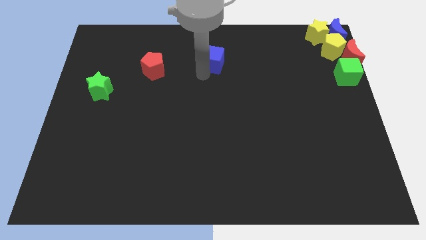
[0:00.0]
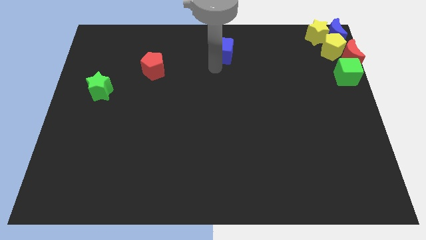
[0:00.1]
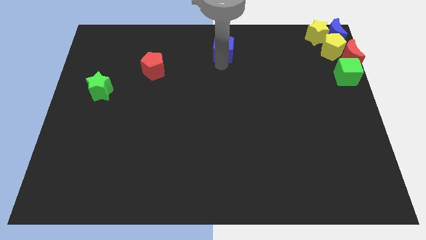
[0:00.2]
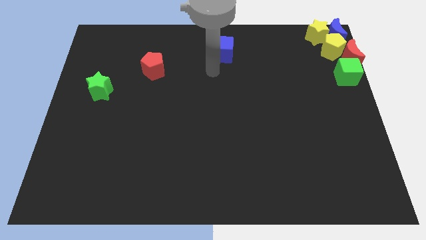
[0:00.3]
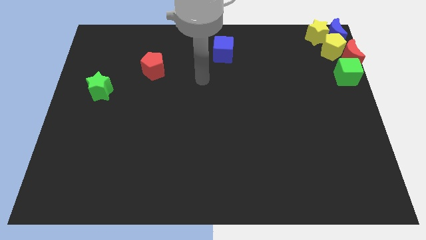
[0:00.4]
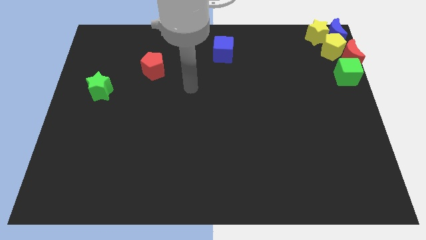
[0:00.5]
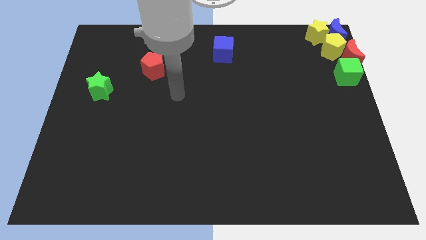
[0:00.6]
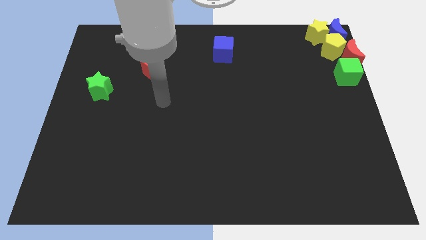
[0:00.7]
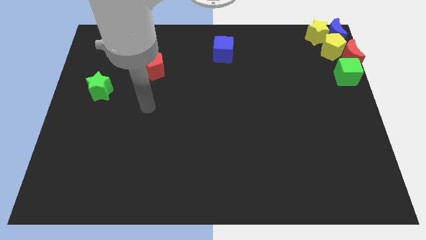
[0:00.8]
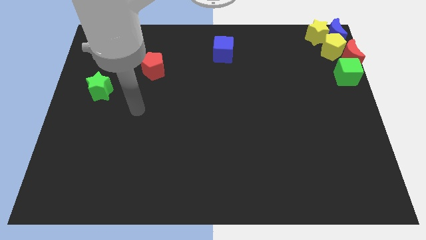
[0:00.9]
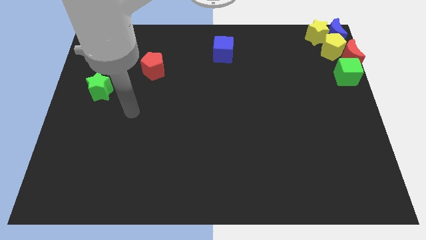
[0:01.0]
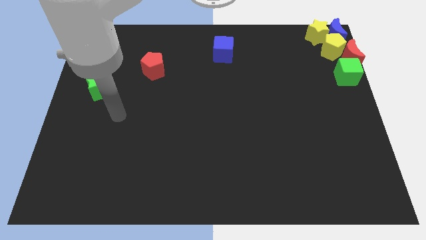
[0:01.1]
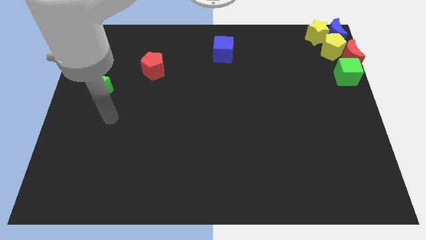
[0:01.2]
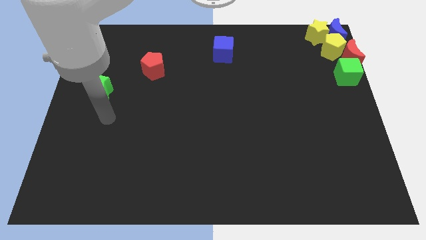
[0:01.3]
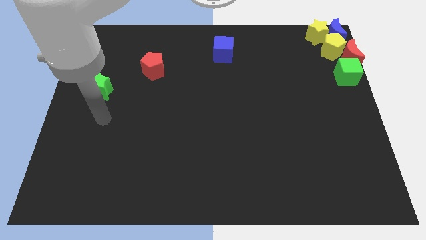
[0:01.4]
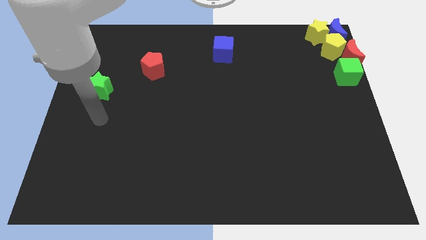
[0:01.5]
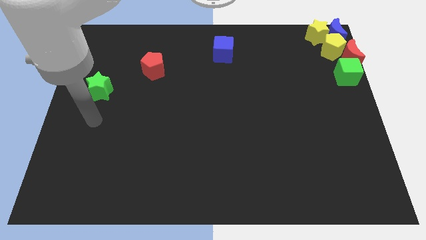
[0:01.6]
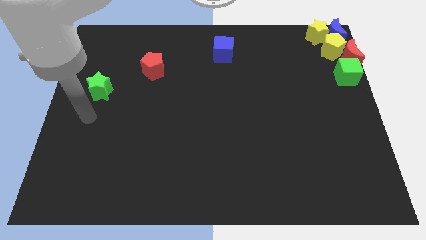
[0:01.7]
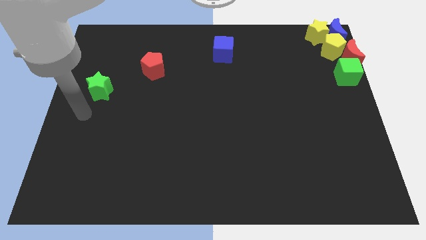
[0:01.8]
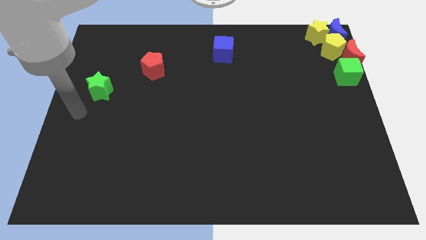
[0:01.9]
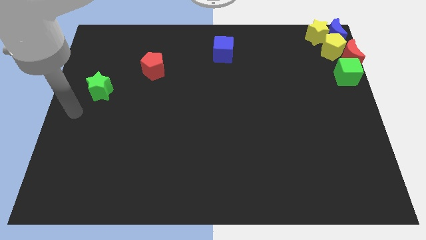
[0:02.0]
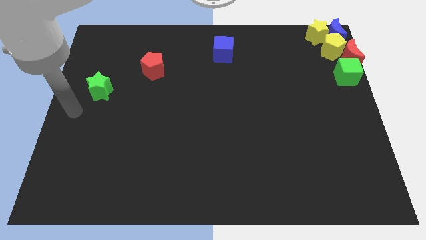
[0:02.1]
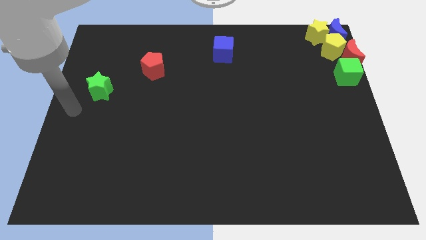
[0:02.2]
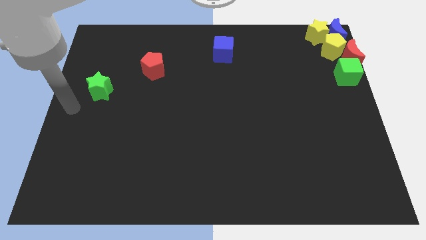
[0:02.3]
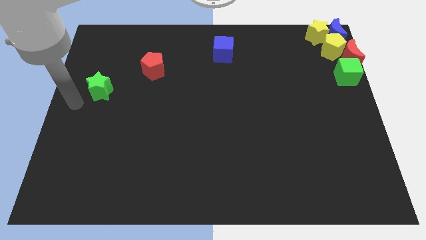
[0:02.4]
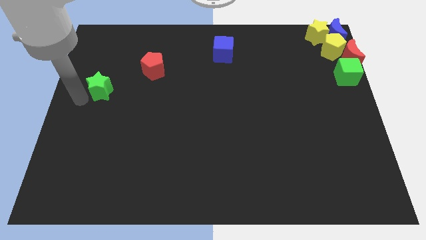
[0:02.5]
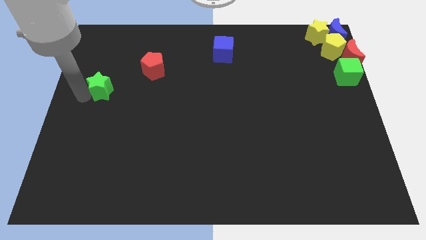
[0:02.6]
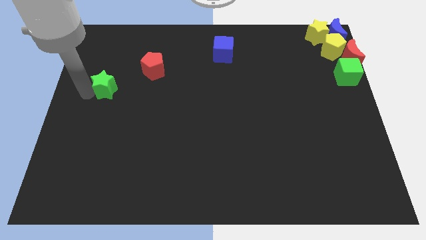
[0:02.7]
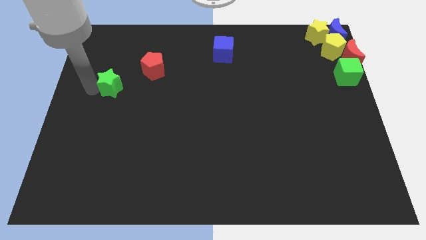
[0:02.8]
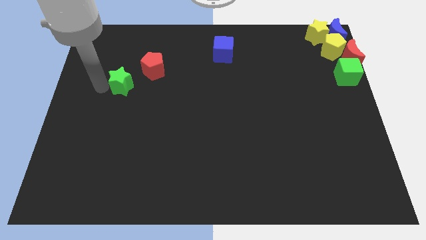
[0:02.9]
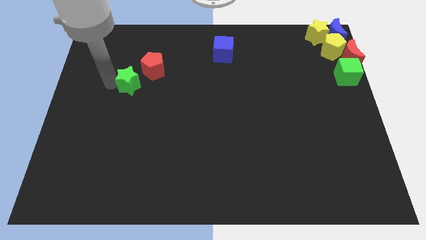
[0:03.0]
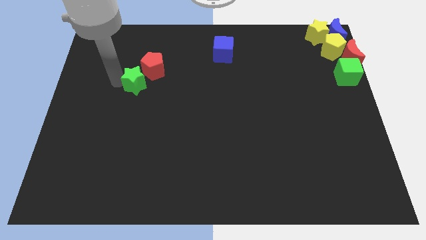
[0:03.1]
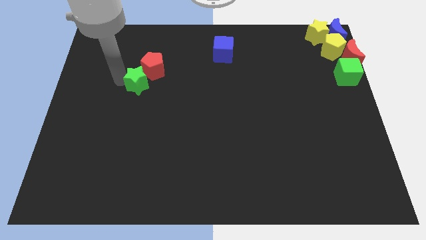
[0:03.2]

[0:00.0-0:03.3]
drag the green star close to the red pentagon

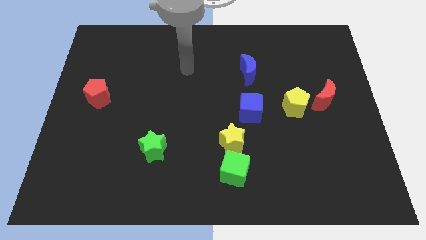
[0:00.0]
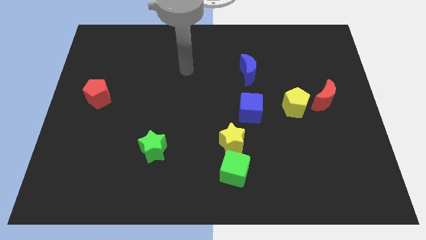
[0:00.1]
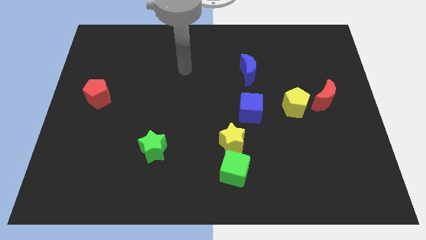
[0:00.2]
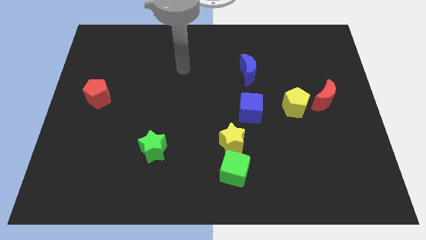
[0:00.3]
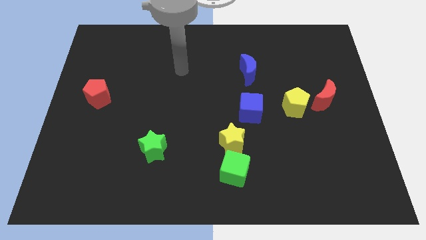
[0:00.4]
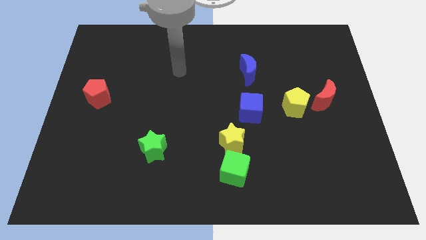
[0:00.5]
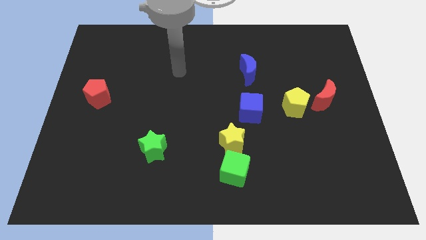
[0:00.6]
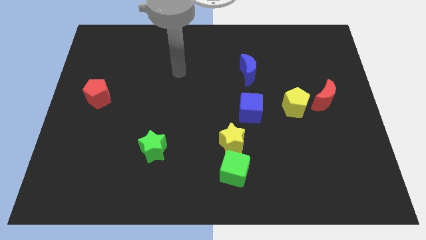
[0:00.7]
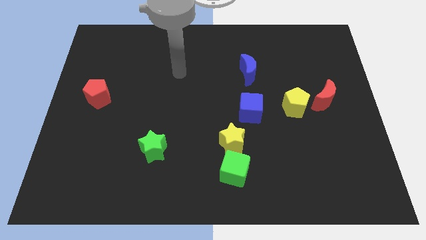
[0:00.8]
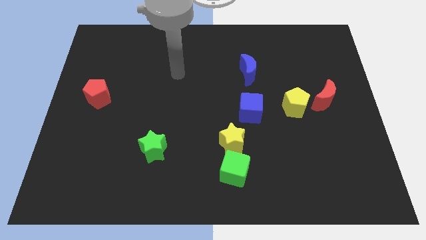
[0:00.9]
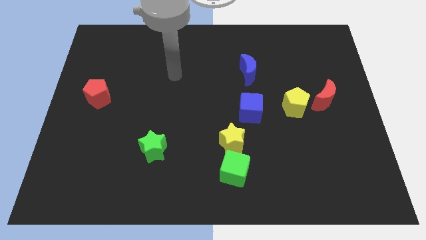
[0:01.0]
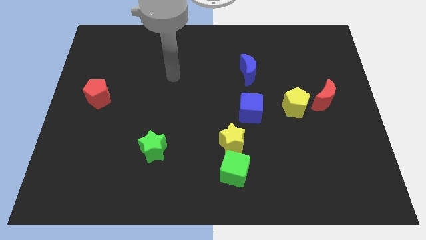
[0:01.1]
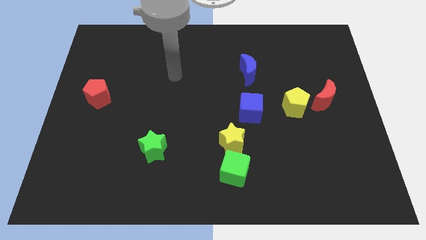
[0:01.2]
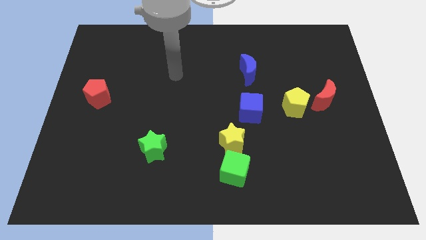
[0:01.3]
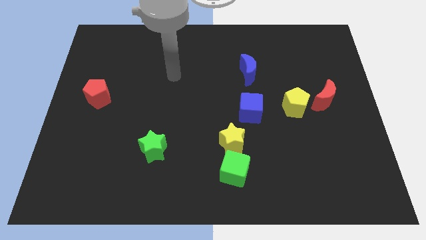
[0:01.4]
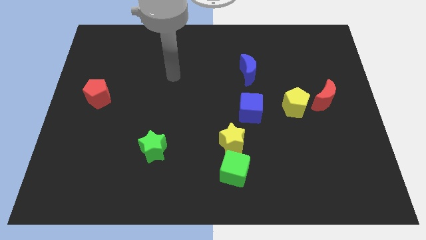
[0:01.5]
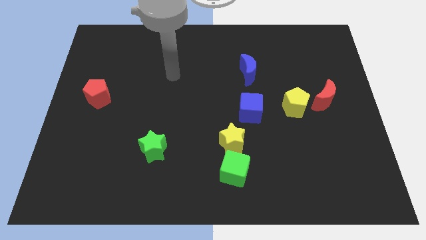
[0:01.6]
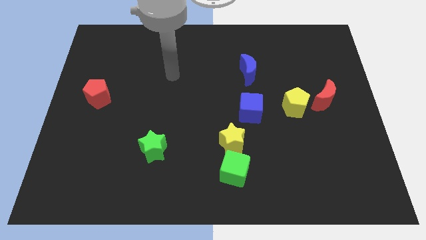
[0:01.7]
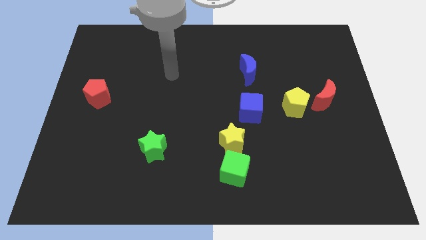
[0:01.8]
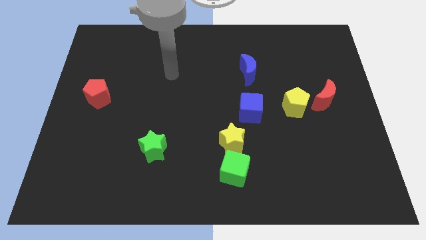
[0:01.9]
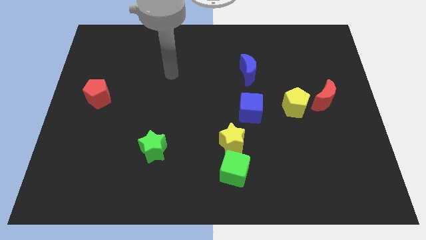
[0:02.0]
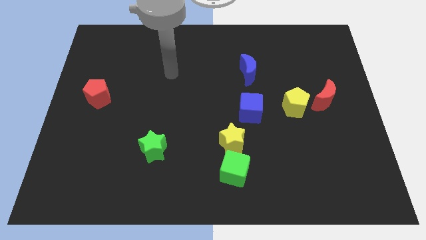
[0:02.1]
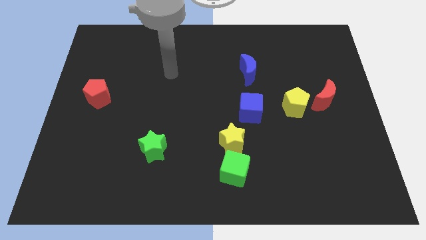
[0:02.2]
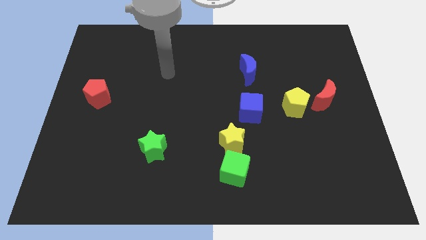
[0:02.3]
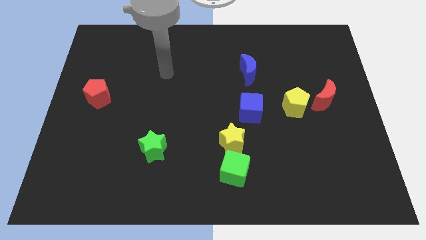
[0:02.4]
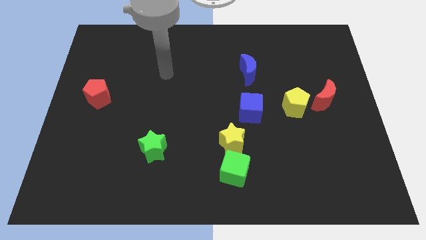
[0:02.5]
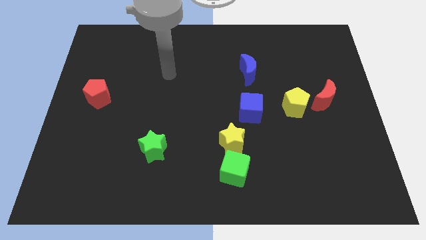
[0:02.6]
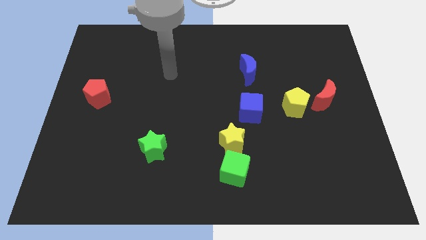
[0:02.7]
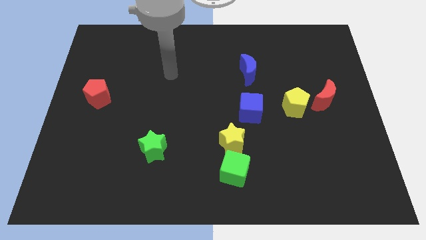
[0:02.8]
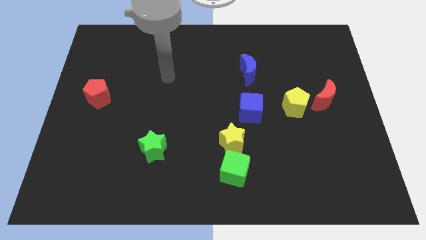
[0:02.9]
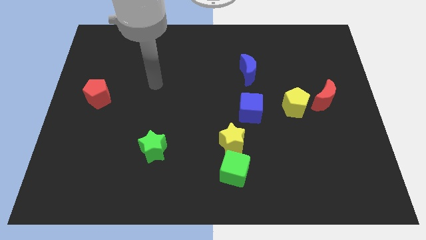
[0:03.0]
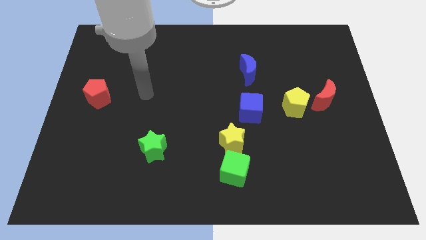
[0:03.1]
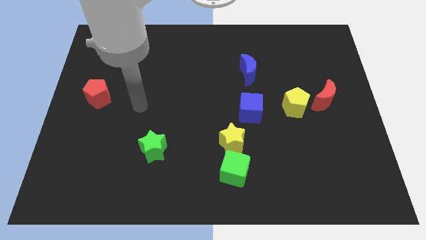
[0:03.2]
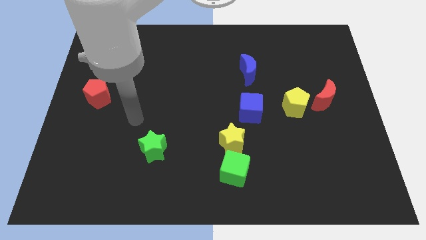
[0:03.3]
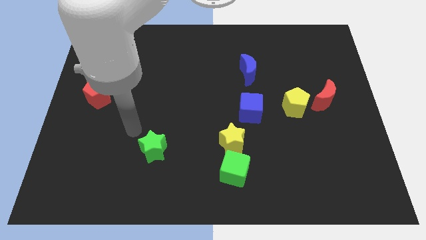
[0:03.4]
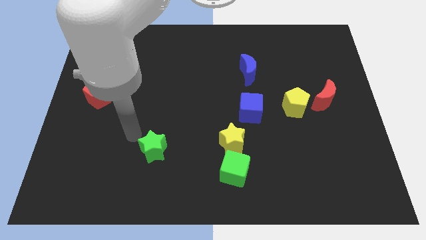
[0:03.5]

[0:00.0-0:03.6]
move your arm towards the green star

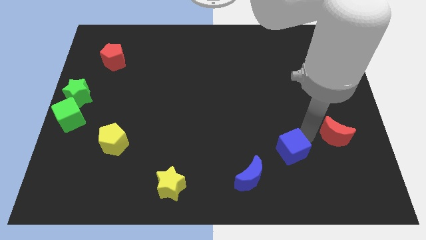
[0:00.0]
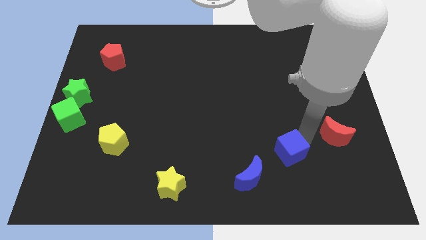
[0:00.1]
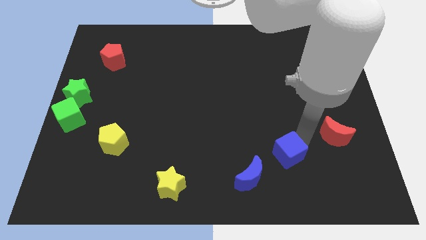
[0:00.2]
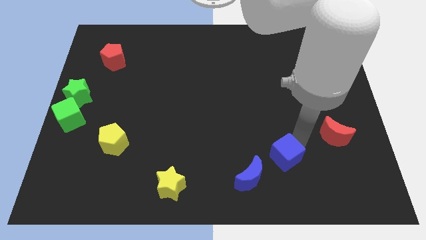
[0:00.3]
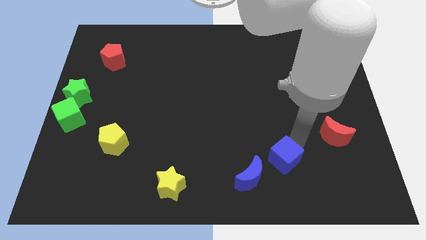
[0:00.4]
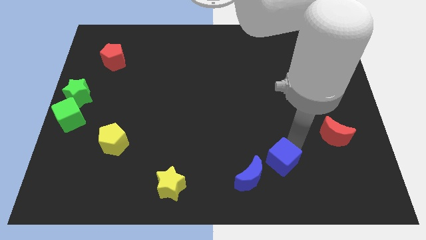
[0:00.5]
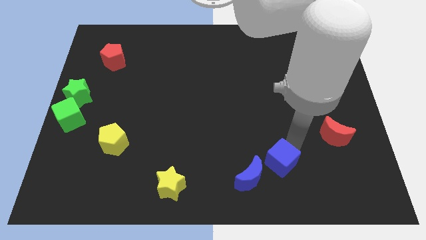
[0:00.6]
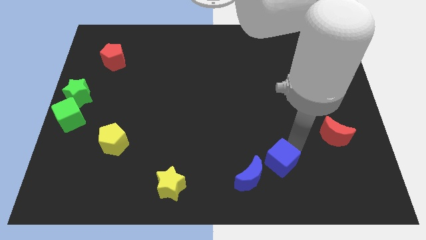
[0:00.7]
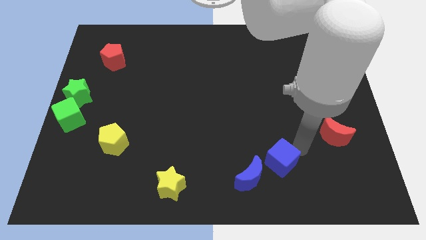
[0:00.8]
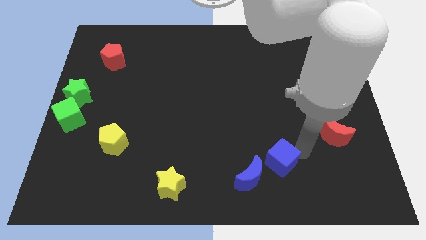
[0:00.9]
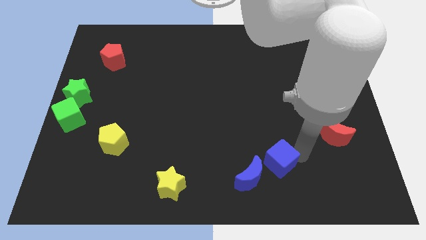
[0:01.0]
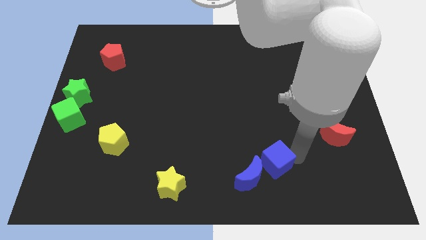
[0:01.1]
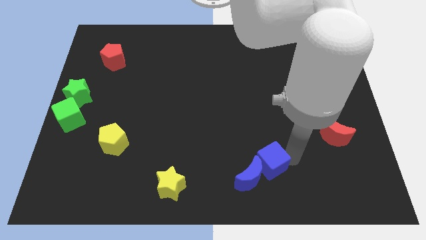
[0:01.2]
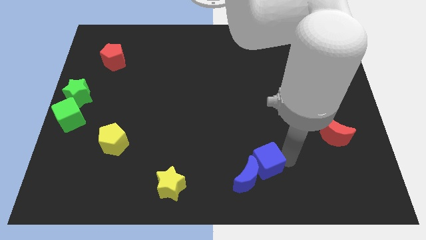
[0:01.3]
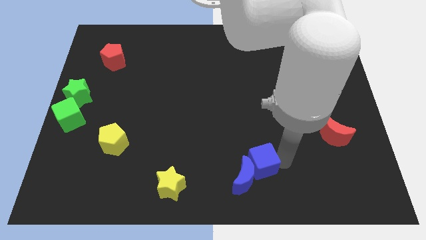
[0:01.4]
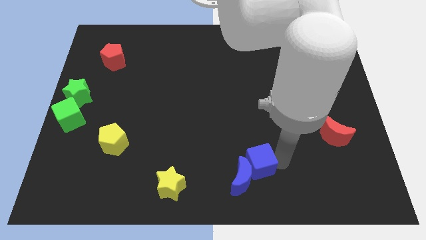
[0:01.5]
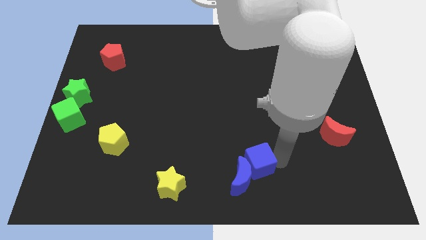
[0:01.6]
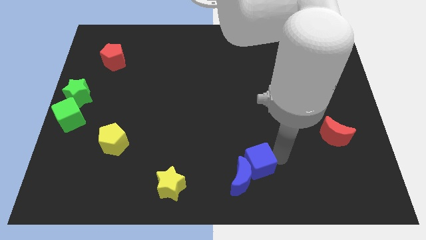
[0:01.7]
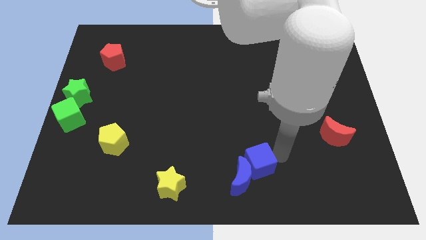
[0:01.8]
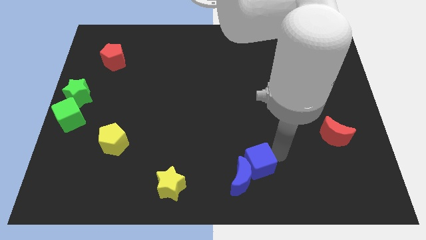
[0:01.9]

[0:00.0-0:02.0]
push the blue cube into the blue moon
